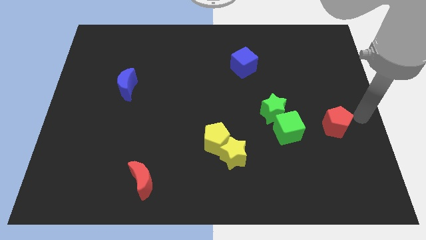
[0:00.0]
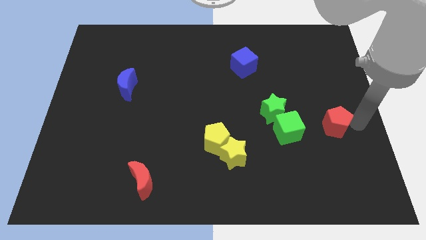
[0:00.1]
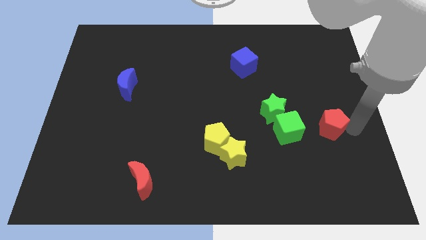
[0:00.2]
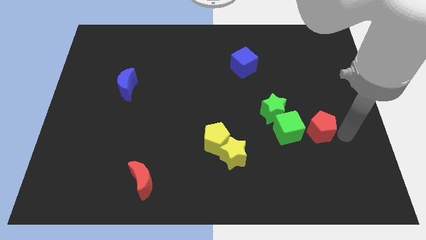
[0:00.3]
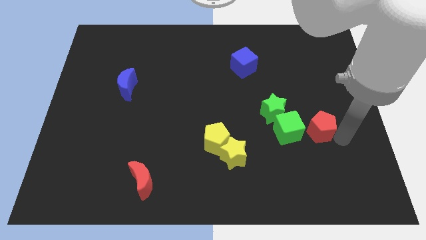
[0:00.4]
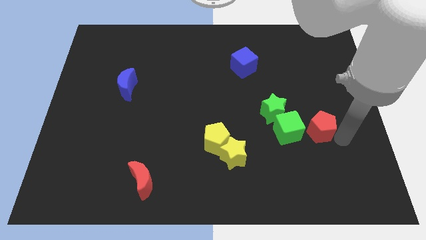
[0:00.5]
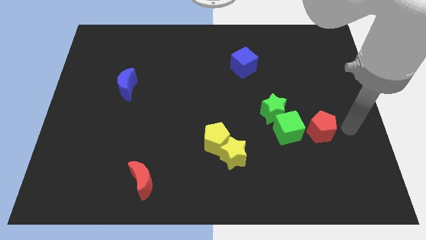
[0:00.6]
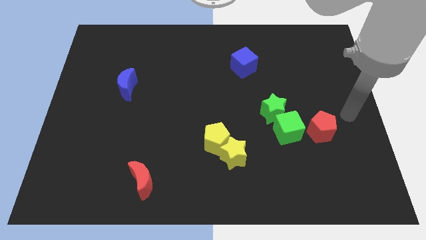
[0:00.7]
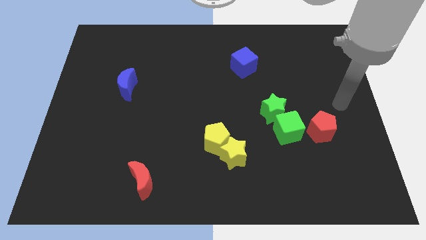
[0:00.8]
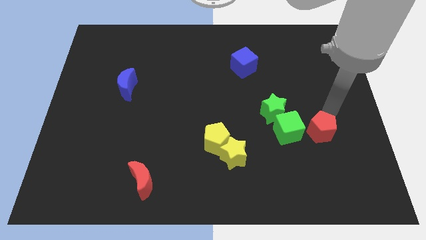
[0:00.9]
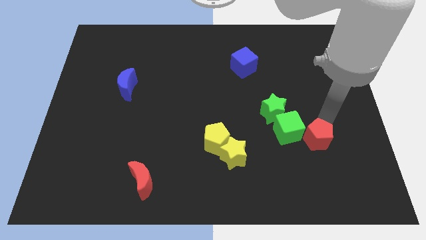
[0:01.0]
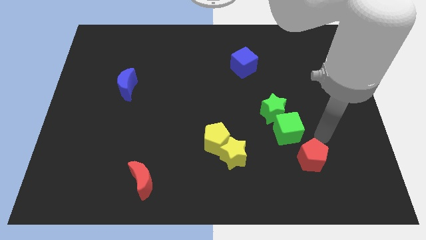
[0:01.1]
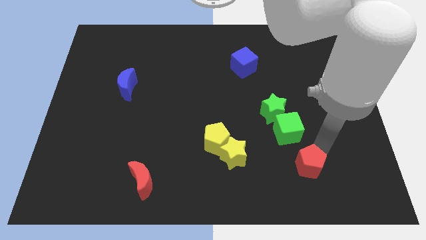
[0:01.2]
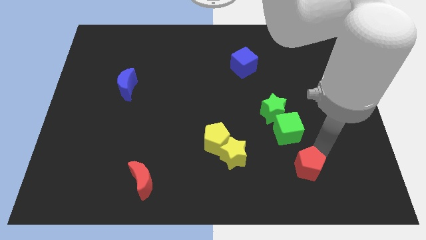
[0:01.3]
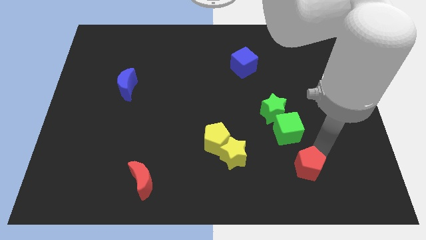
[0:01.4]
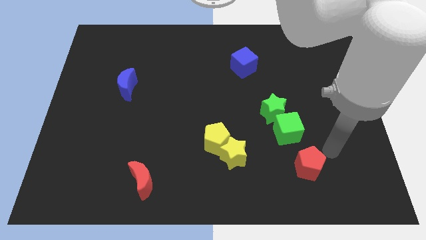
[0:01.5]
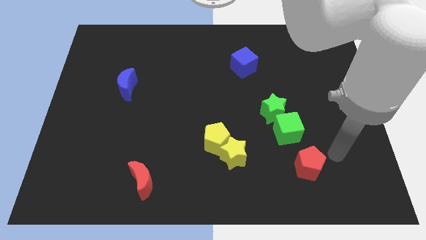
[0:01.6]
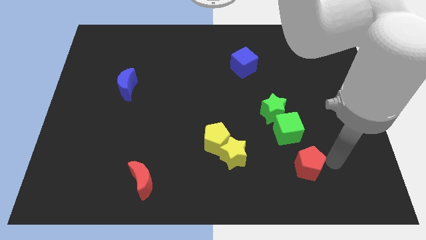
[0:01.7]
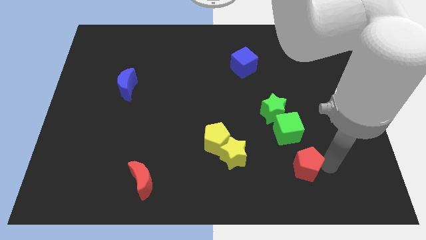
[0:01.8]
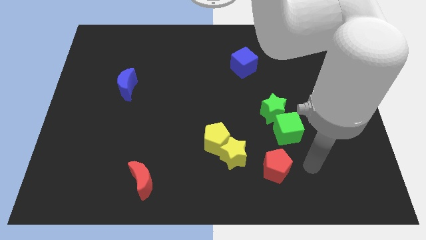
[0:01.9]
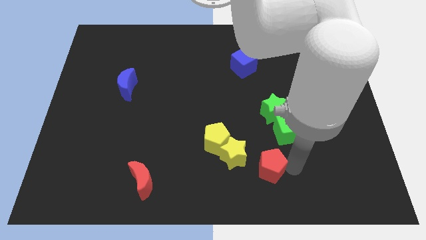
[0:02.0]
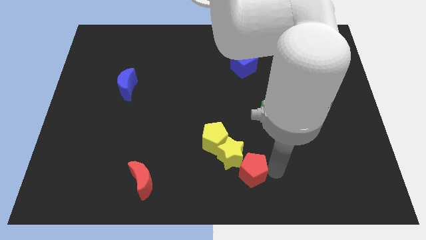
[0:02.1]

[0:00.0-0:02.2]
push the red pentagon into yellow objects

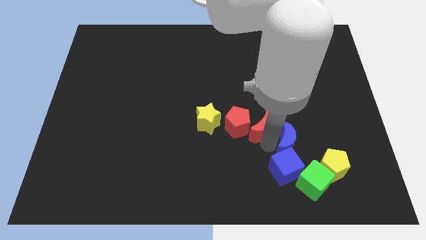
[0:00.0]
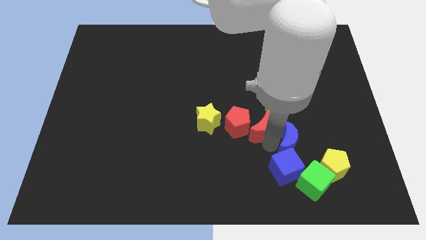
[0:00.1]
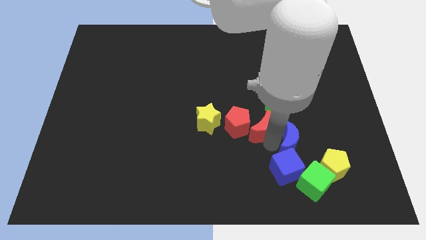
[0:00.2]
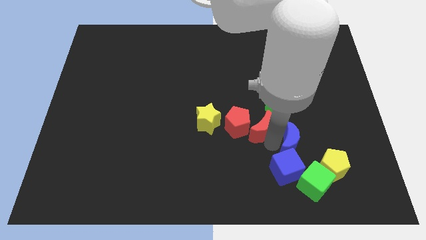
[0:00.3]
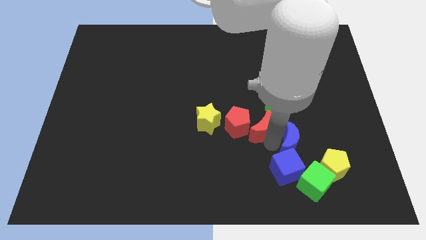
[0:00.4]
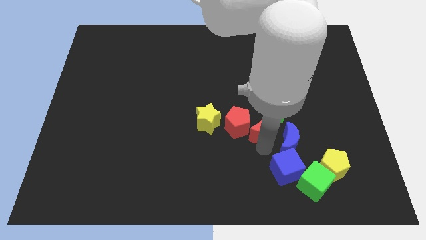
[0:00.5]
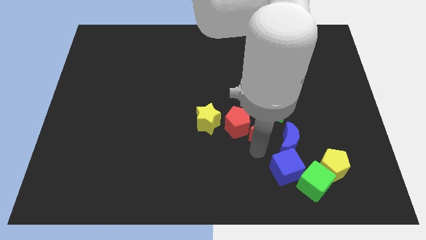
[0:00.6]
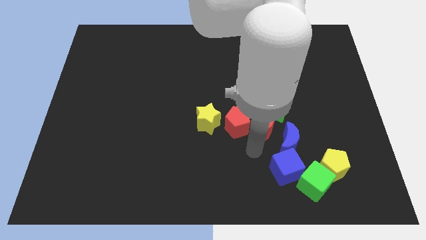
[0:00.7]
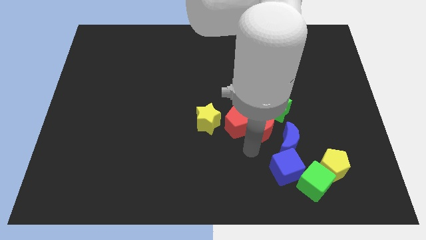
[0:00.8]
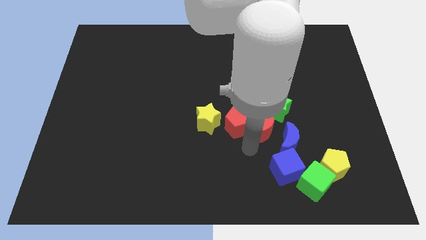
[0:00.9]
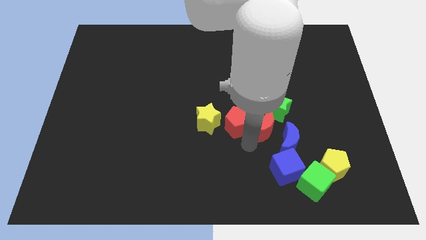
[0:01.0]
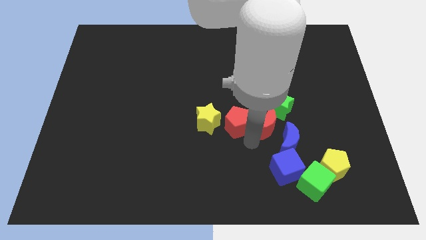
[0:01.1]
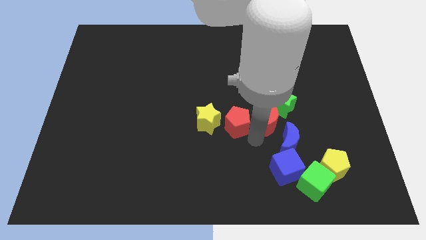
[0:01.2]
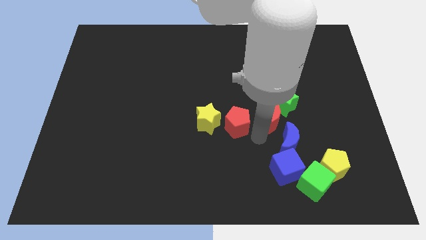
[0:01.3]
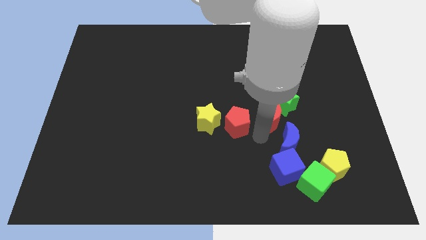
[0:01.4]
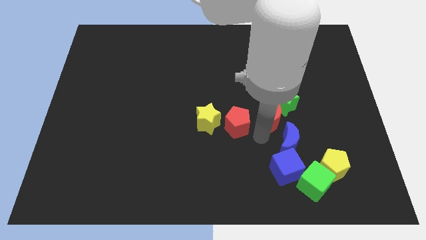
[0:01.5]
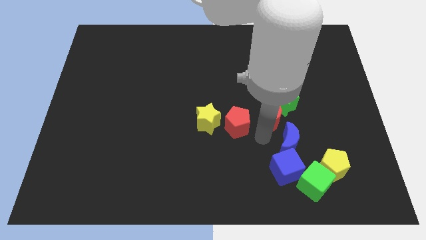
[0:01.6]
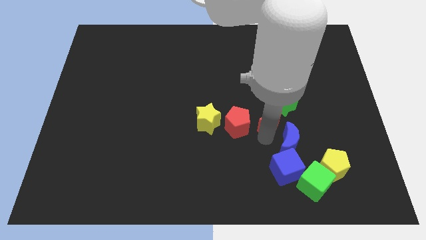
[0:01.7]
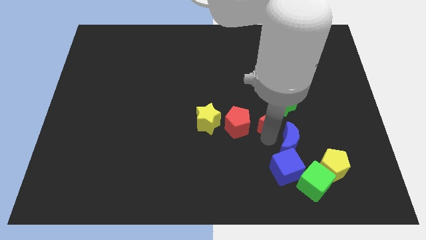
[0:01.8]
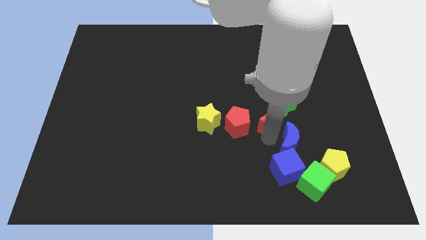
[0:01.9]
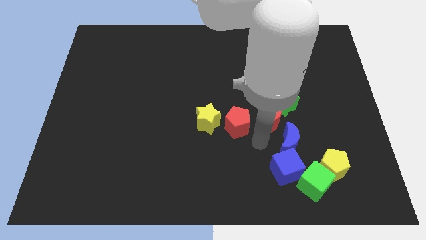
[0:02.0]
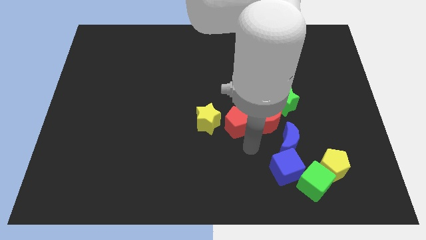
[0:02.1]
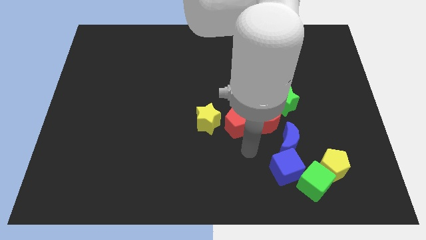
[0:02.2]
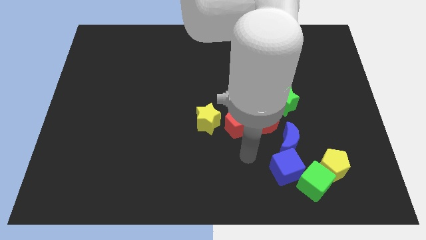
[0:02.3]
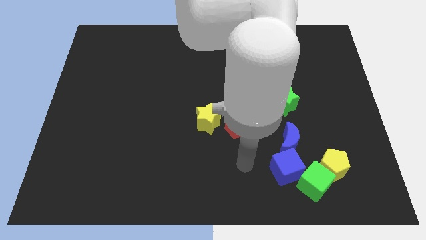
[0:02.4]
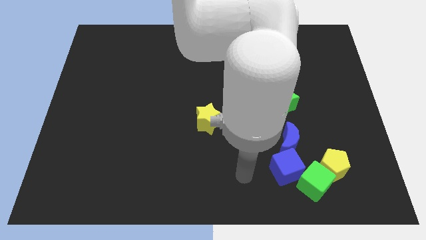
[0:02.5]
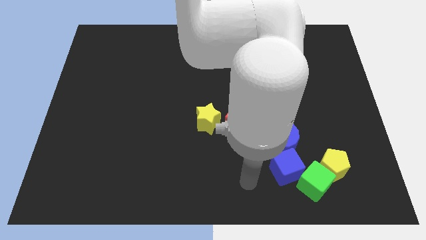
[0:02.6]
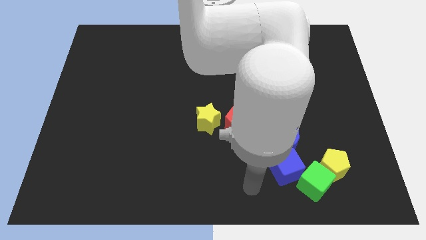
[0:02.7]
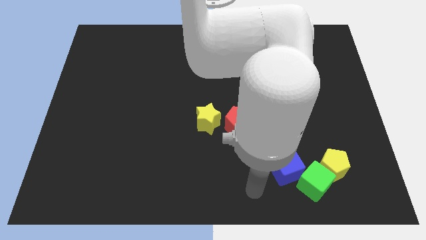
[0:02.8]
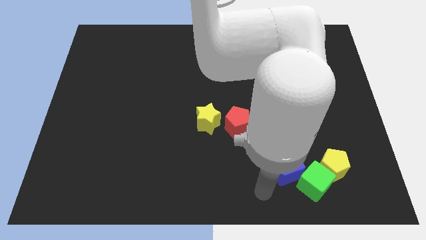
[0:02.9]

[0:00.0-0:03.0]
move your arm away from red and blue moon

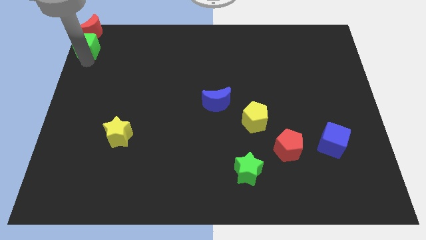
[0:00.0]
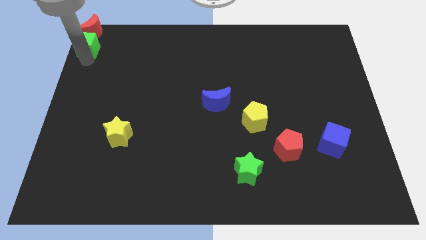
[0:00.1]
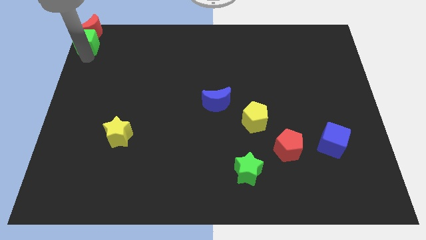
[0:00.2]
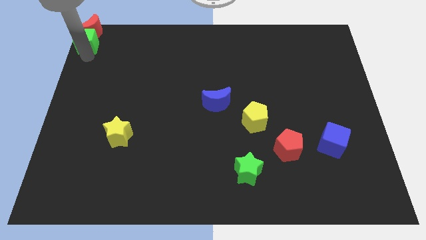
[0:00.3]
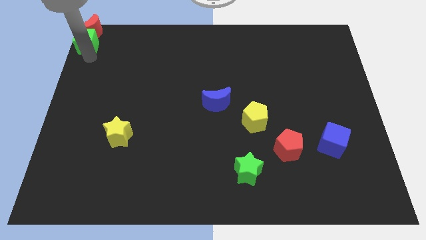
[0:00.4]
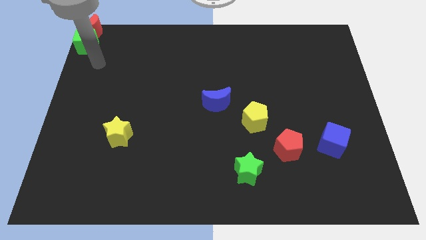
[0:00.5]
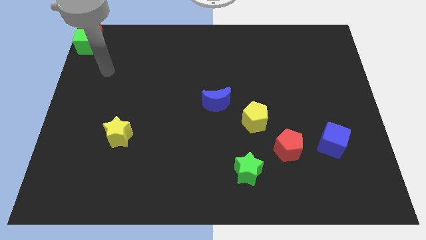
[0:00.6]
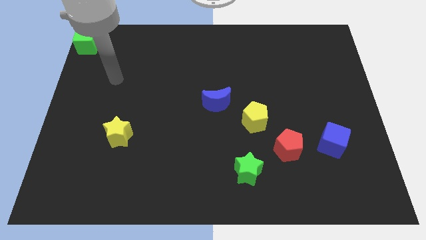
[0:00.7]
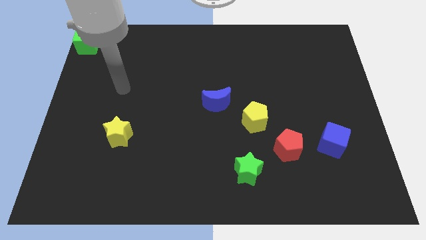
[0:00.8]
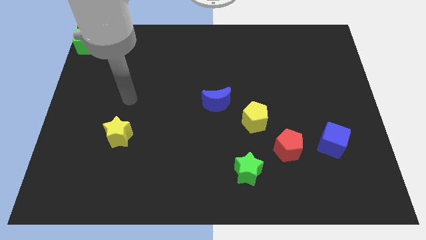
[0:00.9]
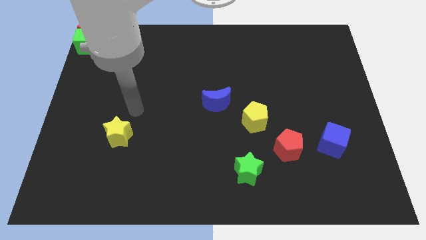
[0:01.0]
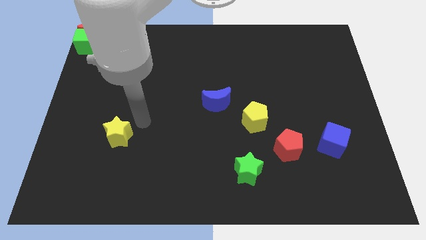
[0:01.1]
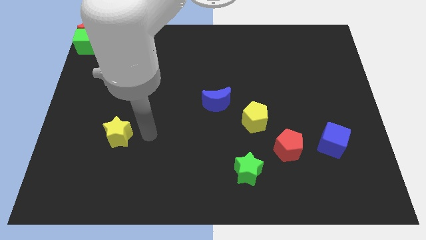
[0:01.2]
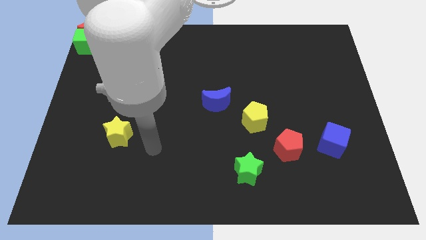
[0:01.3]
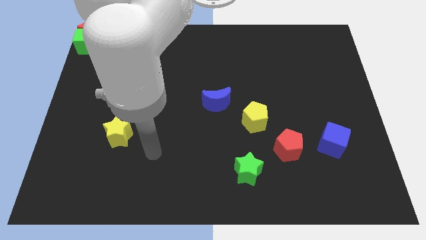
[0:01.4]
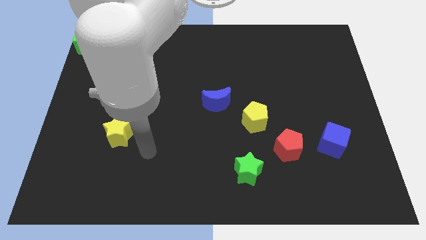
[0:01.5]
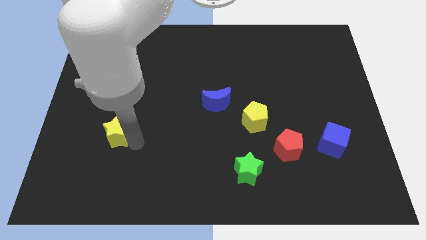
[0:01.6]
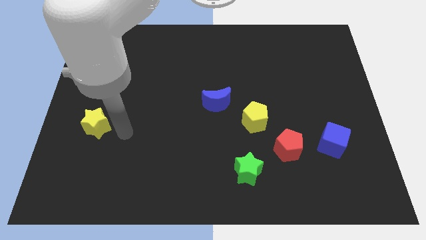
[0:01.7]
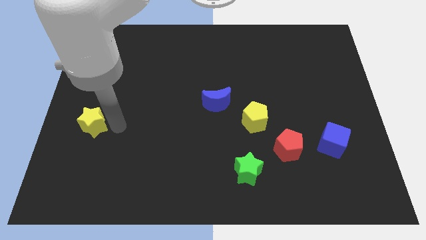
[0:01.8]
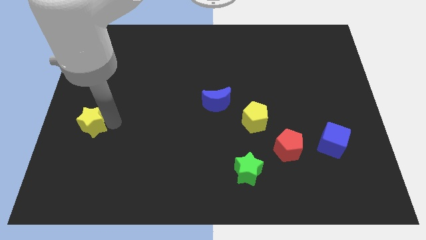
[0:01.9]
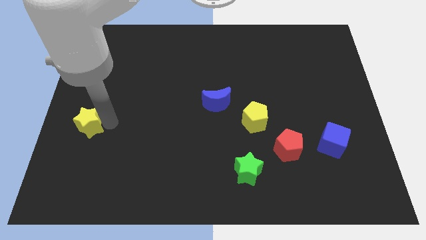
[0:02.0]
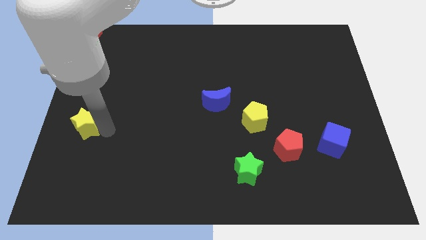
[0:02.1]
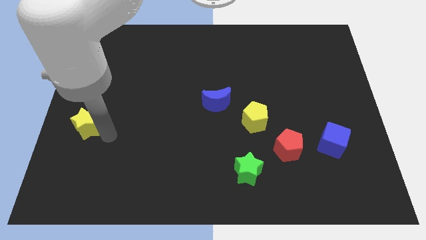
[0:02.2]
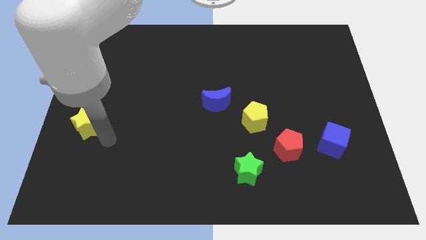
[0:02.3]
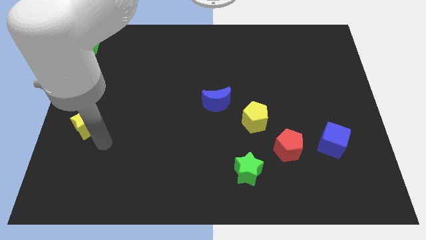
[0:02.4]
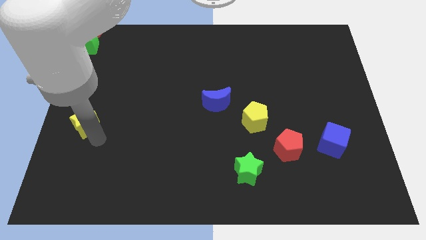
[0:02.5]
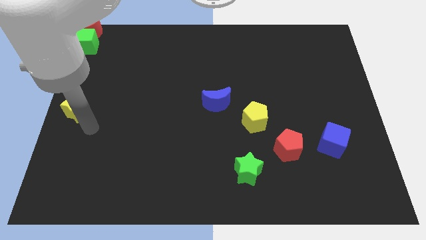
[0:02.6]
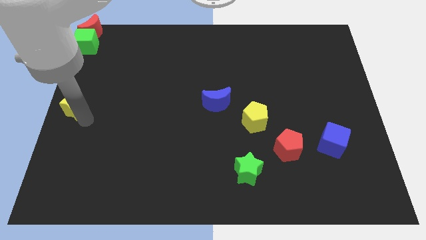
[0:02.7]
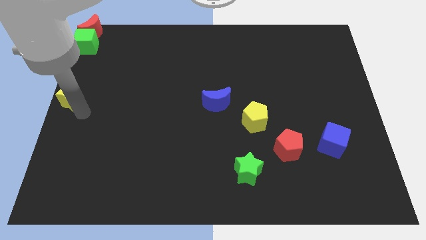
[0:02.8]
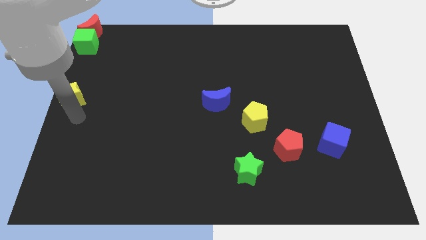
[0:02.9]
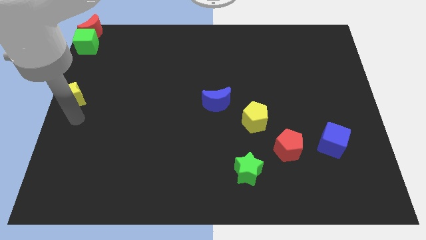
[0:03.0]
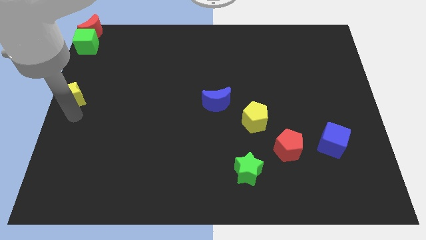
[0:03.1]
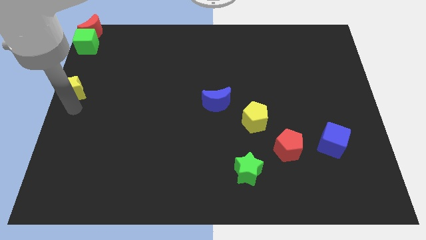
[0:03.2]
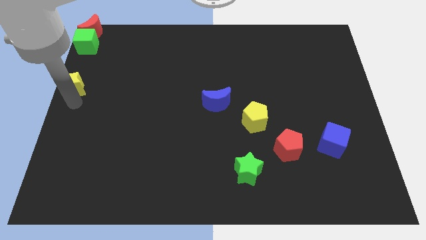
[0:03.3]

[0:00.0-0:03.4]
place the yellow star down to the green cube

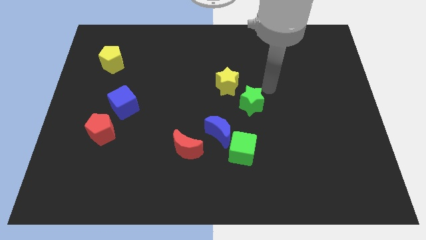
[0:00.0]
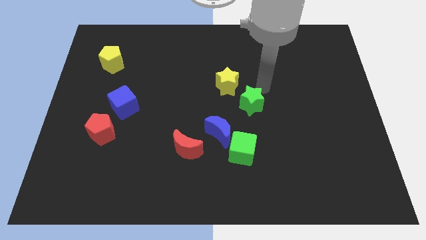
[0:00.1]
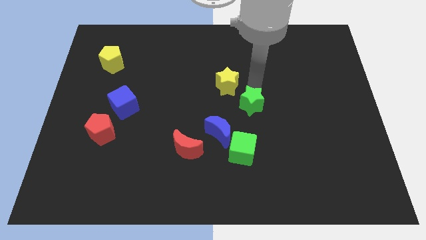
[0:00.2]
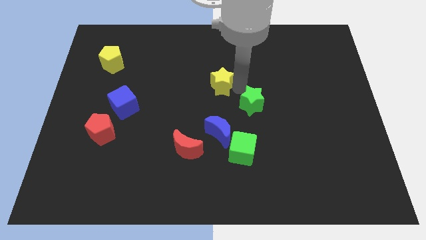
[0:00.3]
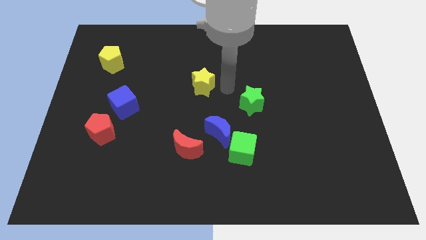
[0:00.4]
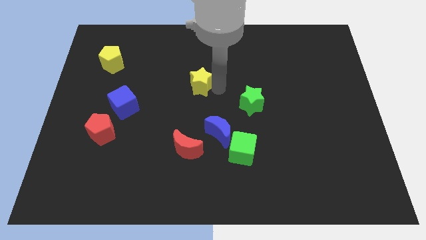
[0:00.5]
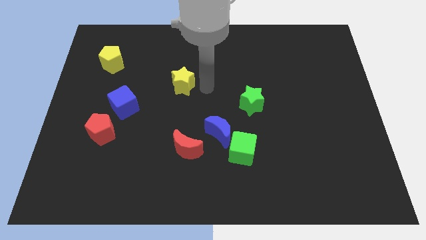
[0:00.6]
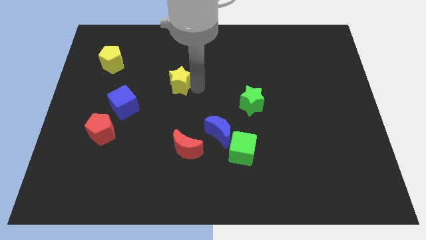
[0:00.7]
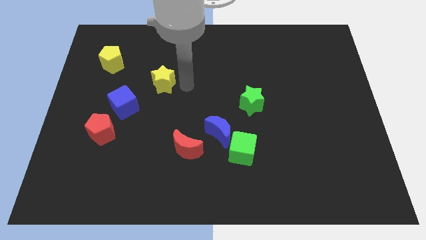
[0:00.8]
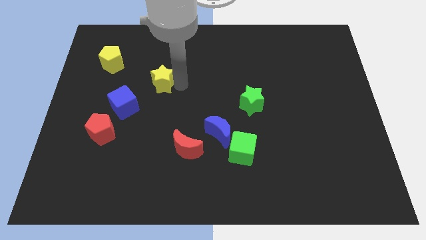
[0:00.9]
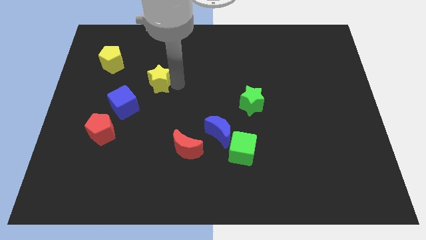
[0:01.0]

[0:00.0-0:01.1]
move the yellow star towards the left side of the board
